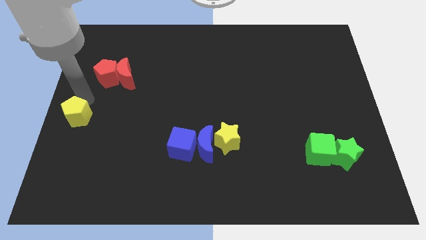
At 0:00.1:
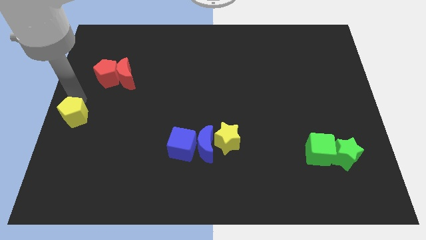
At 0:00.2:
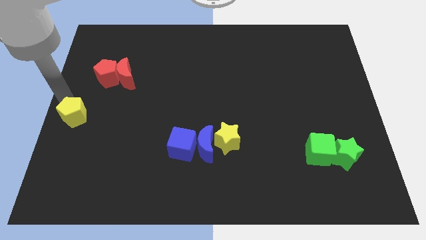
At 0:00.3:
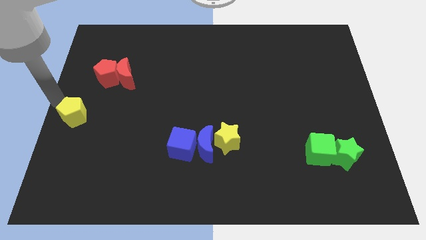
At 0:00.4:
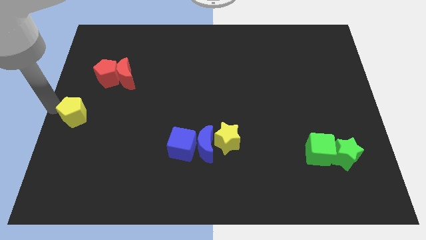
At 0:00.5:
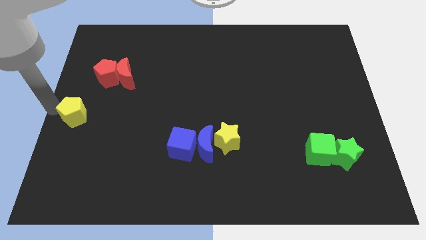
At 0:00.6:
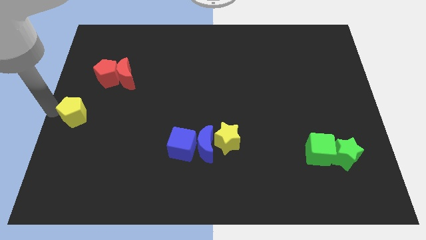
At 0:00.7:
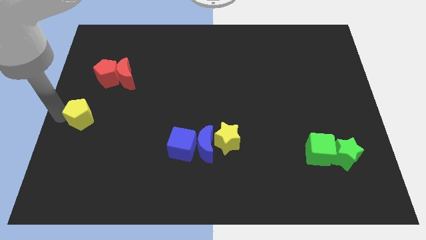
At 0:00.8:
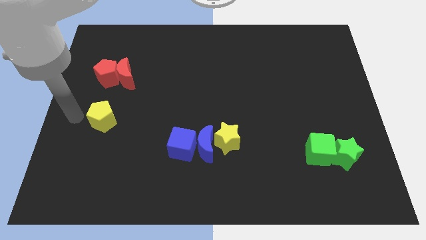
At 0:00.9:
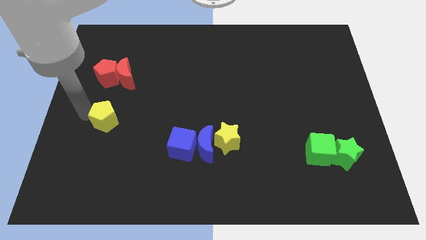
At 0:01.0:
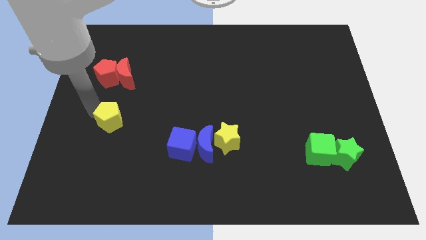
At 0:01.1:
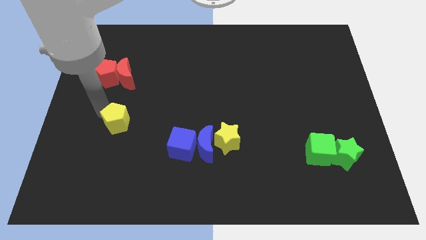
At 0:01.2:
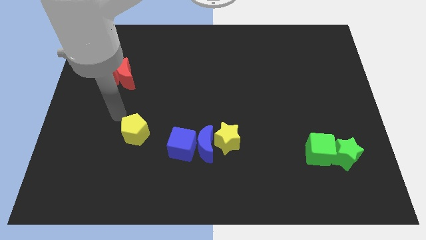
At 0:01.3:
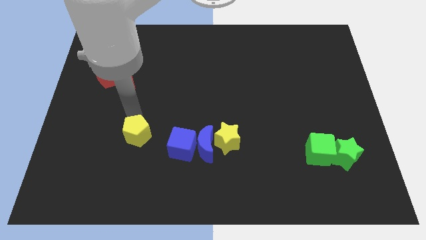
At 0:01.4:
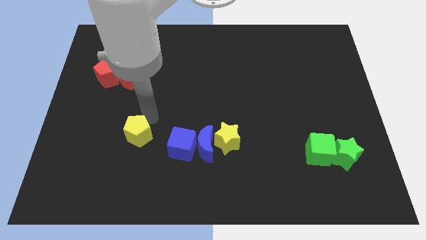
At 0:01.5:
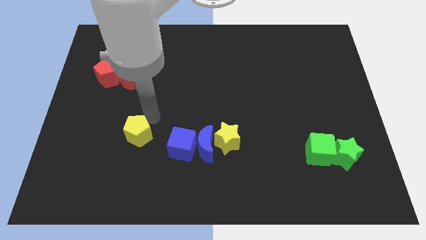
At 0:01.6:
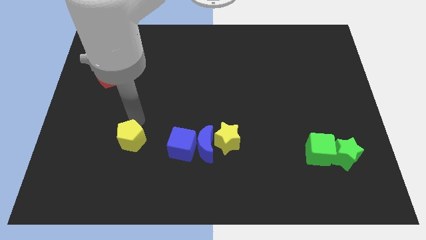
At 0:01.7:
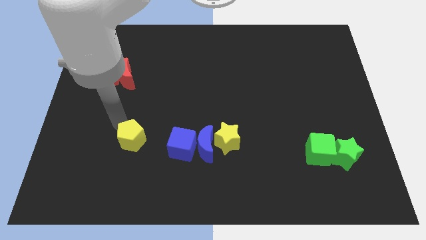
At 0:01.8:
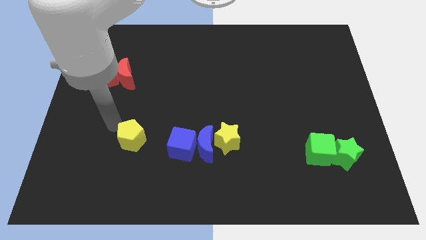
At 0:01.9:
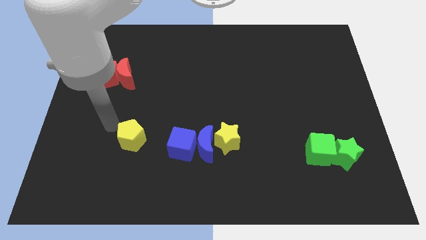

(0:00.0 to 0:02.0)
put the yellow pentagon to the left of the blue cube

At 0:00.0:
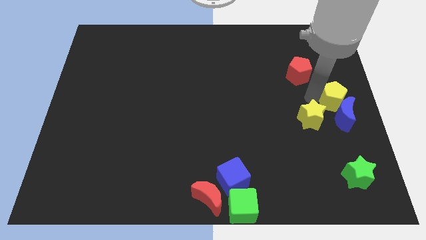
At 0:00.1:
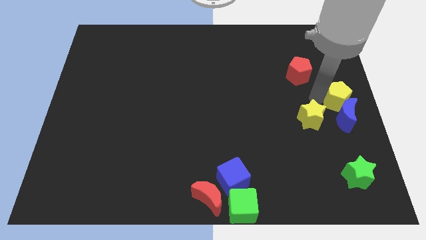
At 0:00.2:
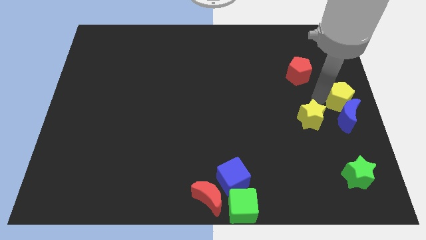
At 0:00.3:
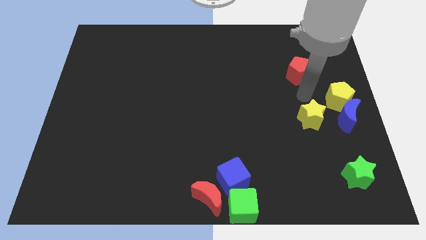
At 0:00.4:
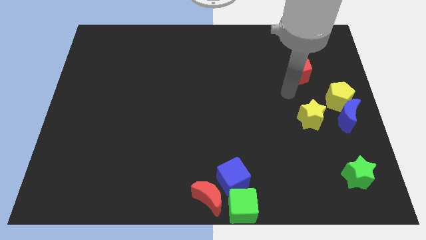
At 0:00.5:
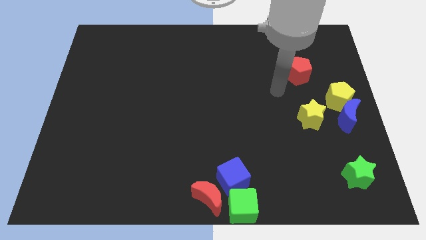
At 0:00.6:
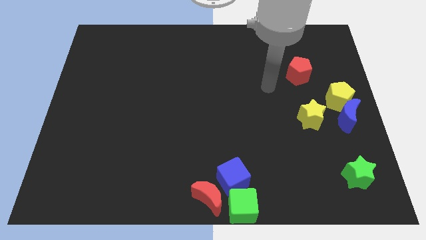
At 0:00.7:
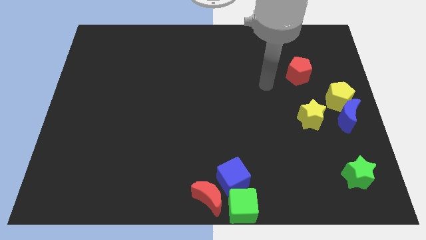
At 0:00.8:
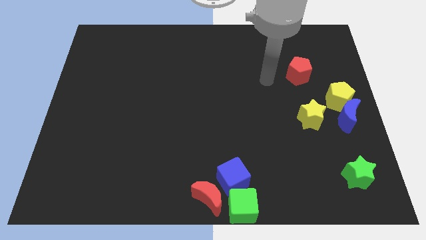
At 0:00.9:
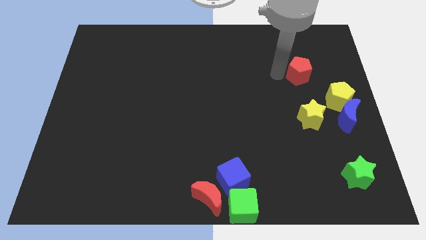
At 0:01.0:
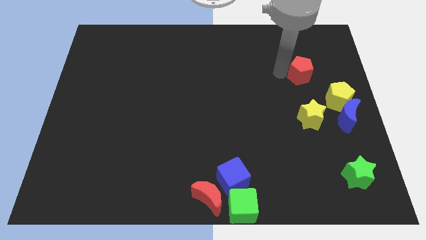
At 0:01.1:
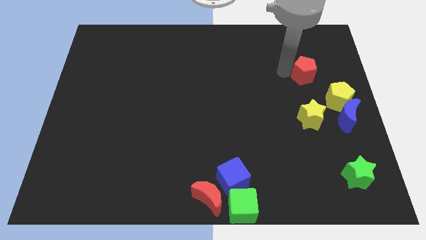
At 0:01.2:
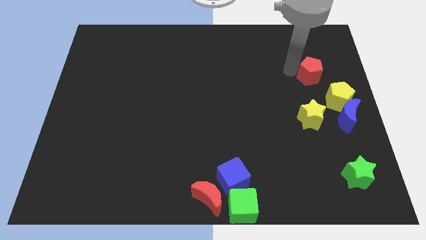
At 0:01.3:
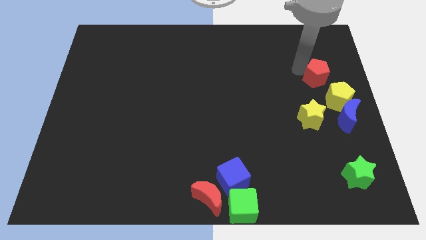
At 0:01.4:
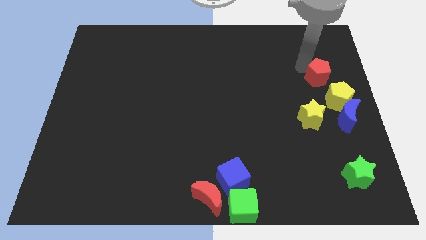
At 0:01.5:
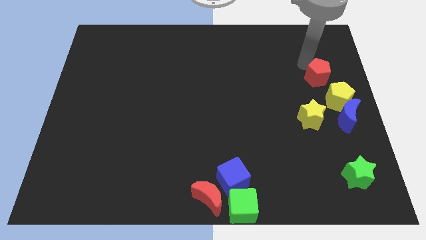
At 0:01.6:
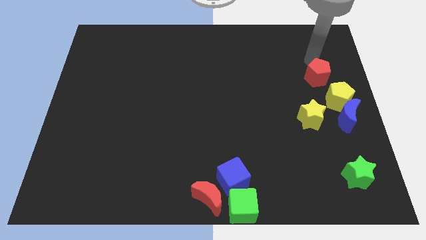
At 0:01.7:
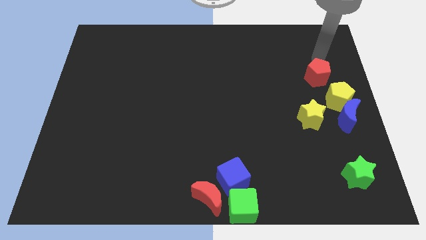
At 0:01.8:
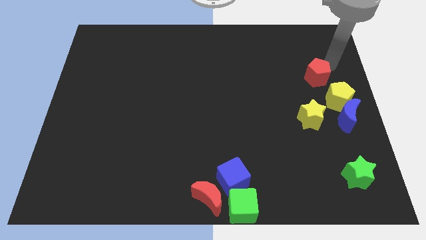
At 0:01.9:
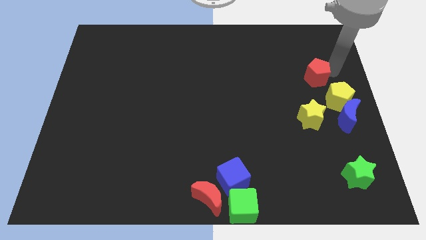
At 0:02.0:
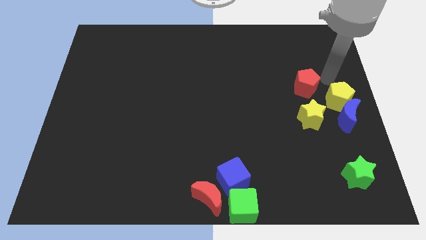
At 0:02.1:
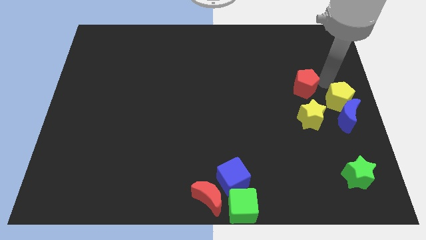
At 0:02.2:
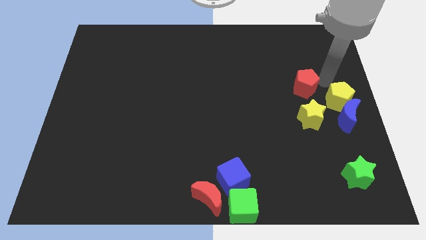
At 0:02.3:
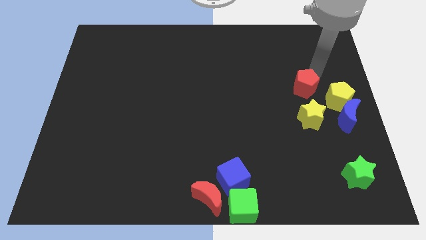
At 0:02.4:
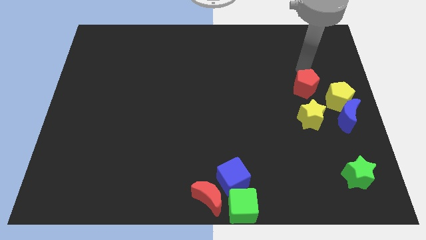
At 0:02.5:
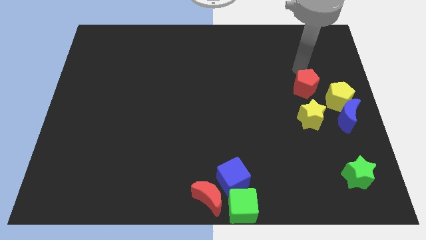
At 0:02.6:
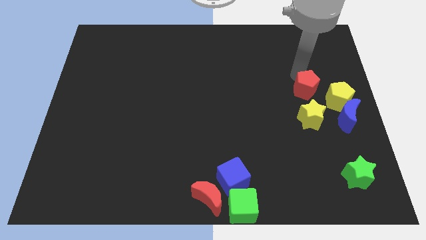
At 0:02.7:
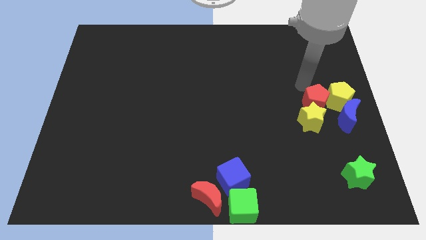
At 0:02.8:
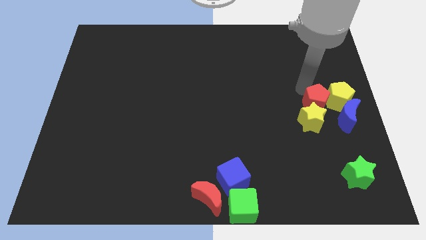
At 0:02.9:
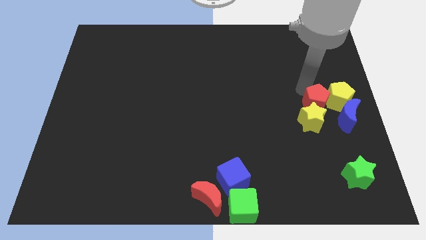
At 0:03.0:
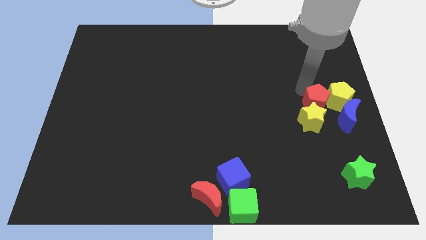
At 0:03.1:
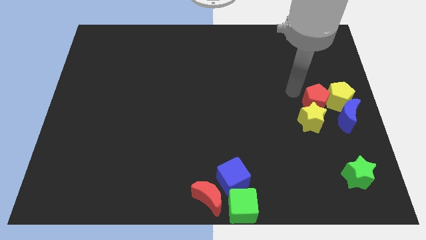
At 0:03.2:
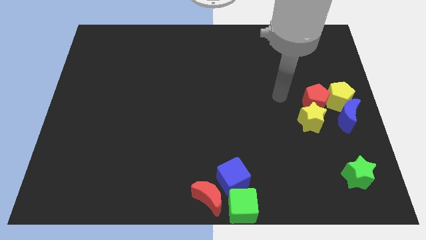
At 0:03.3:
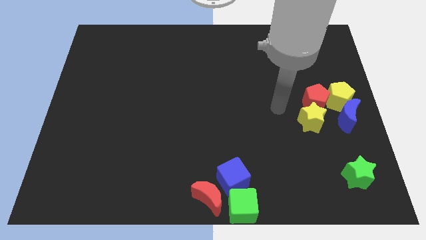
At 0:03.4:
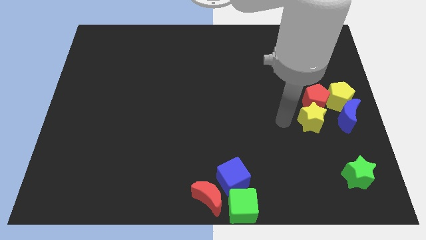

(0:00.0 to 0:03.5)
slide the red pentagon into yellow pentagon

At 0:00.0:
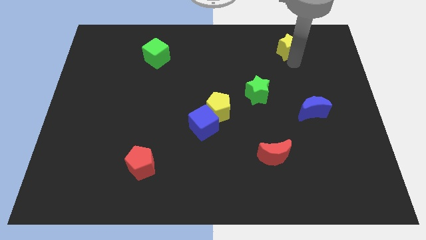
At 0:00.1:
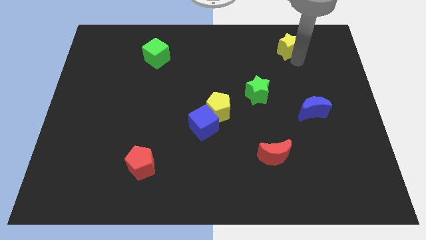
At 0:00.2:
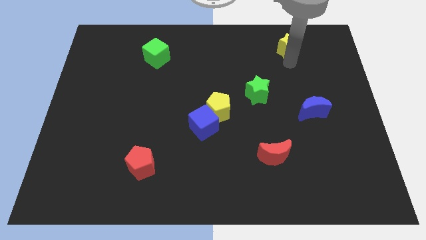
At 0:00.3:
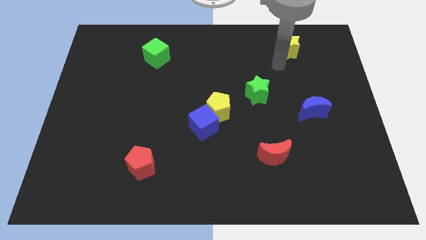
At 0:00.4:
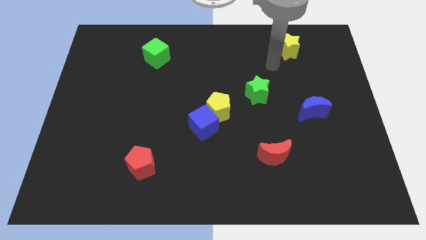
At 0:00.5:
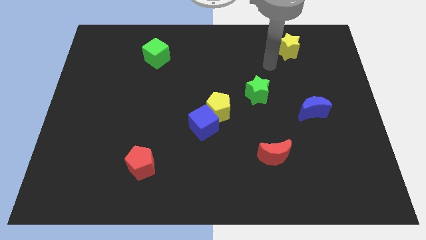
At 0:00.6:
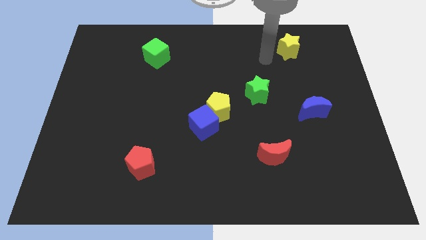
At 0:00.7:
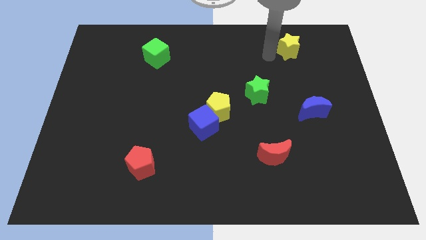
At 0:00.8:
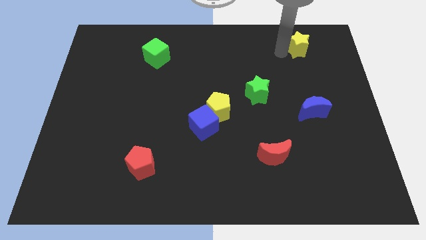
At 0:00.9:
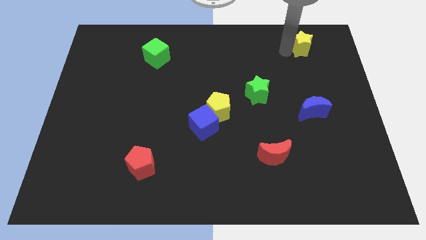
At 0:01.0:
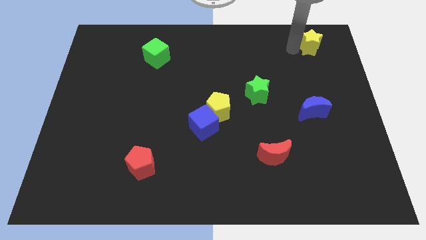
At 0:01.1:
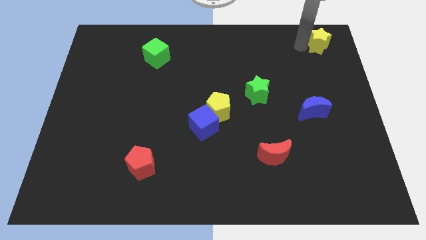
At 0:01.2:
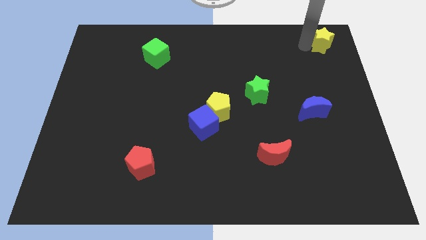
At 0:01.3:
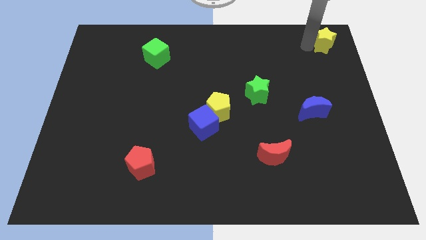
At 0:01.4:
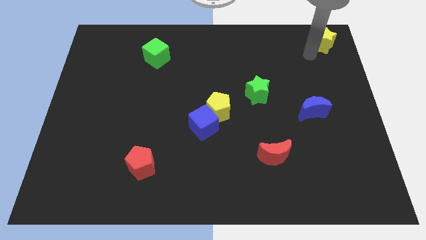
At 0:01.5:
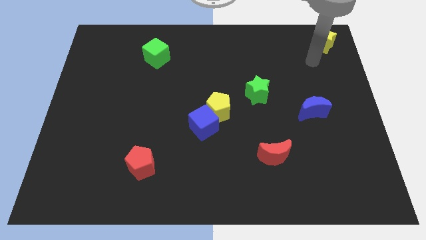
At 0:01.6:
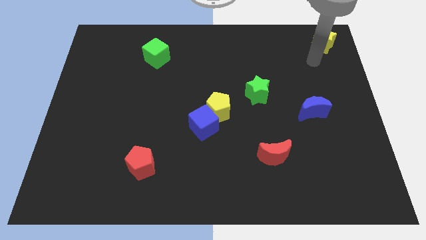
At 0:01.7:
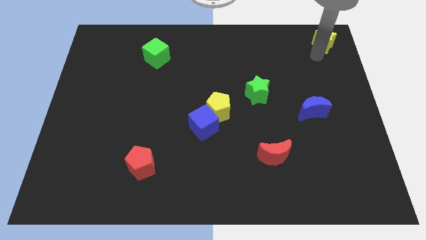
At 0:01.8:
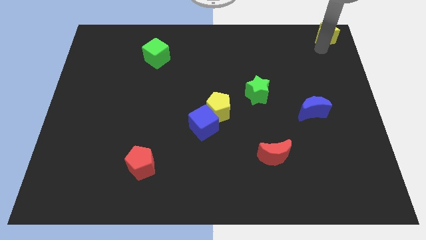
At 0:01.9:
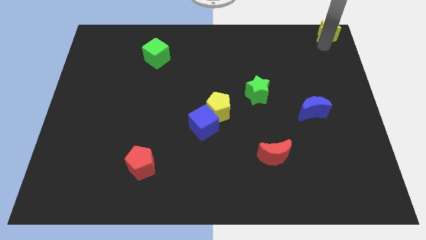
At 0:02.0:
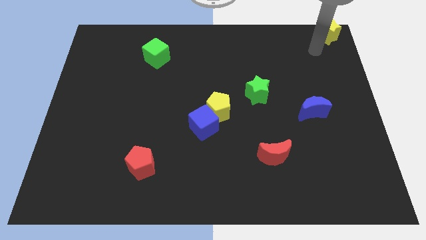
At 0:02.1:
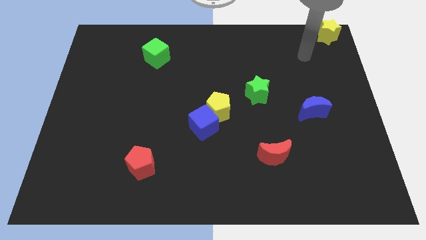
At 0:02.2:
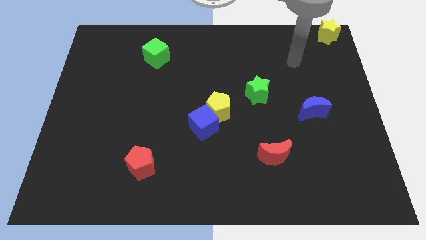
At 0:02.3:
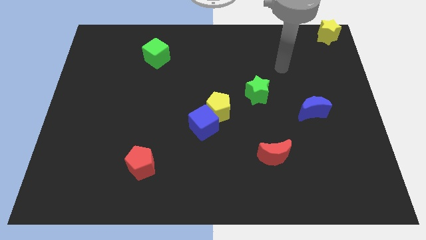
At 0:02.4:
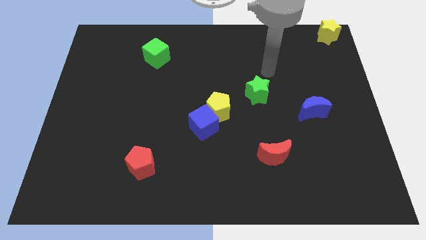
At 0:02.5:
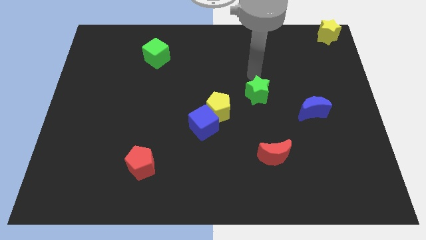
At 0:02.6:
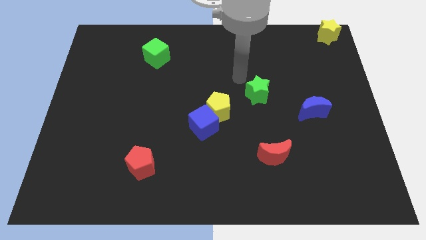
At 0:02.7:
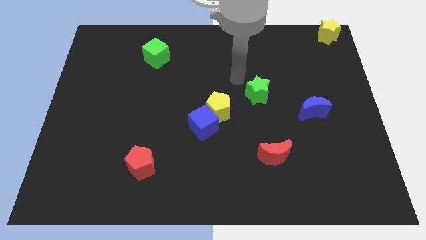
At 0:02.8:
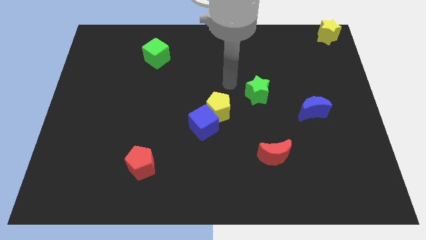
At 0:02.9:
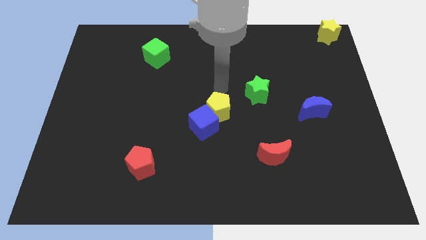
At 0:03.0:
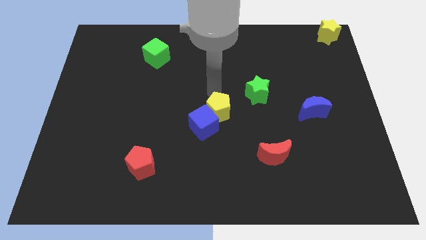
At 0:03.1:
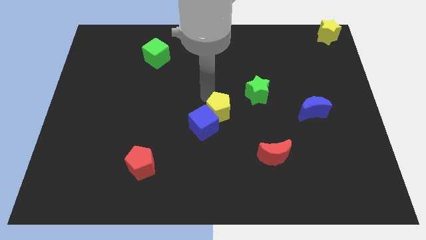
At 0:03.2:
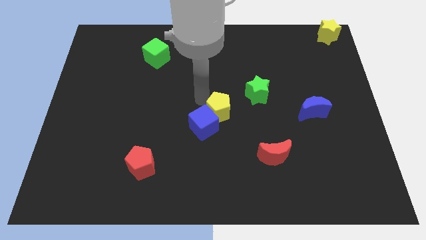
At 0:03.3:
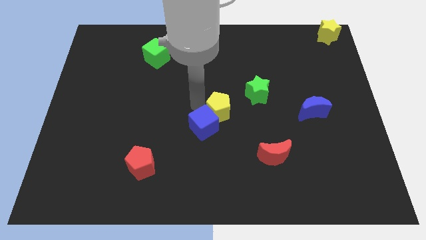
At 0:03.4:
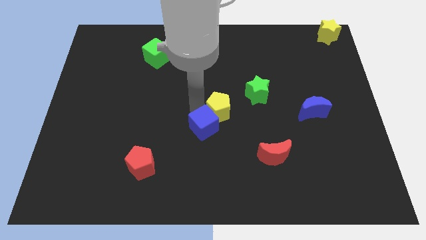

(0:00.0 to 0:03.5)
push the yellow star to top right corner
